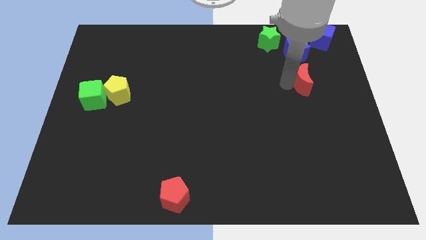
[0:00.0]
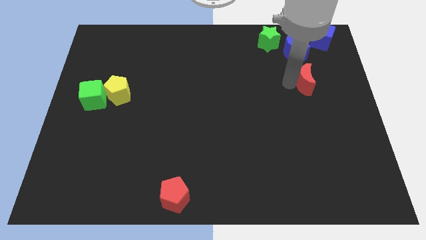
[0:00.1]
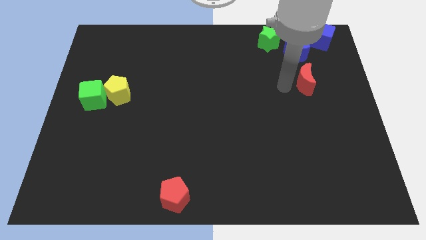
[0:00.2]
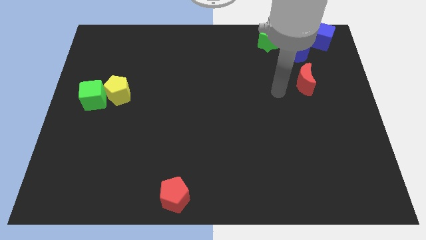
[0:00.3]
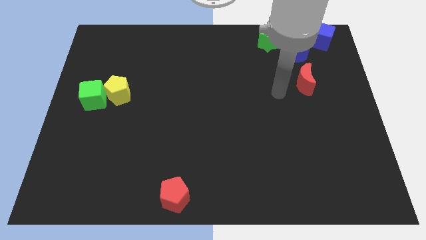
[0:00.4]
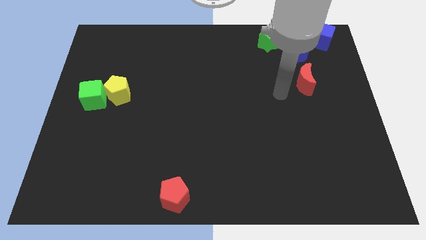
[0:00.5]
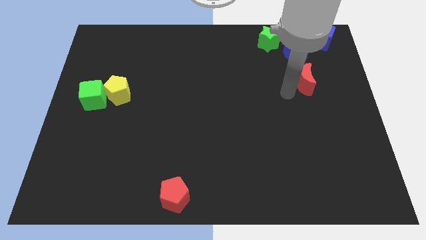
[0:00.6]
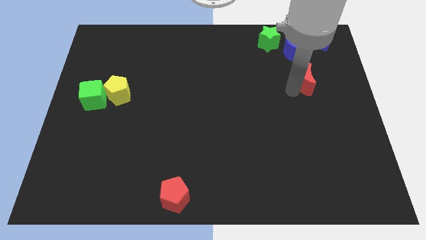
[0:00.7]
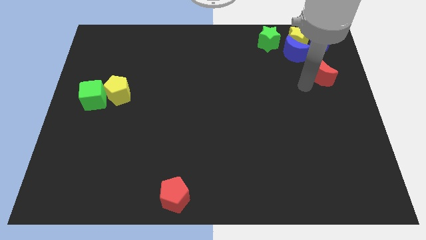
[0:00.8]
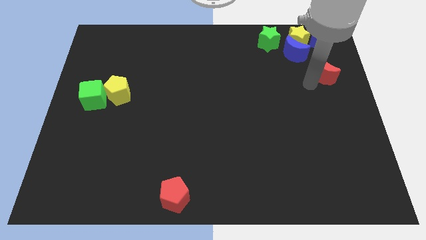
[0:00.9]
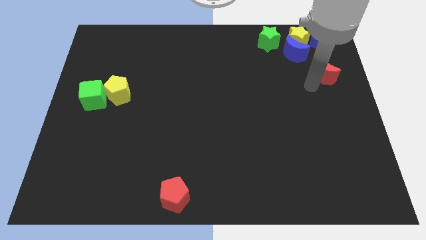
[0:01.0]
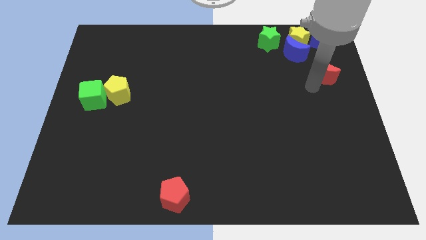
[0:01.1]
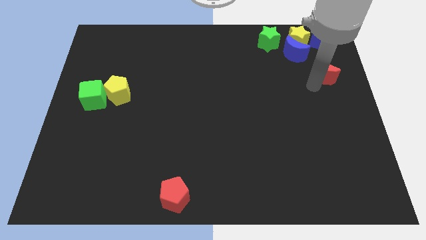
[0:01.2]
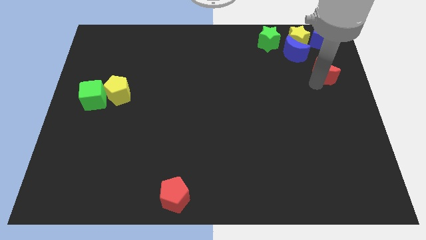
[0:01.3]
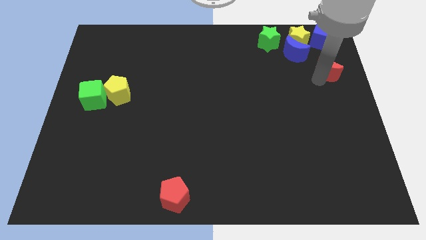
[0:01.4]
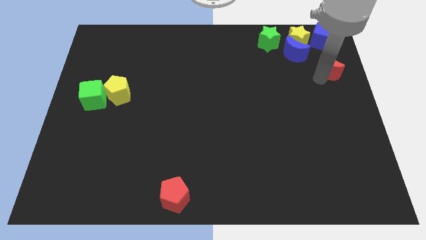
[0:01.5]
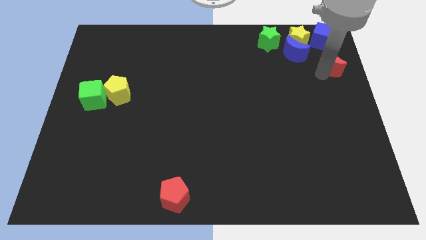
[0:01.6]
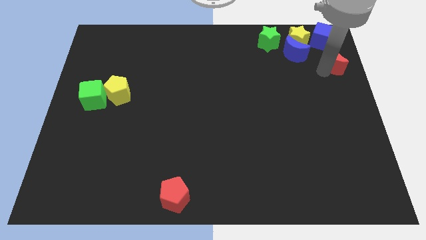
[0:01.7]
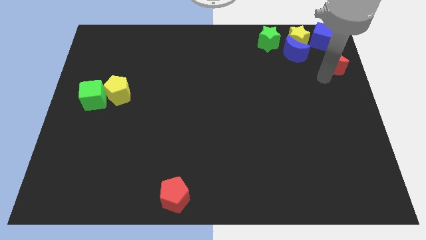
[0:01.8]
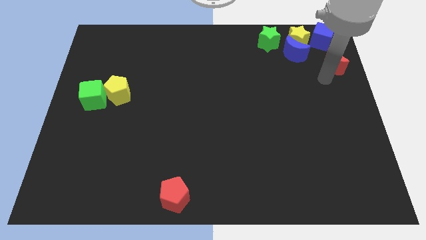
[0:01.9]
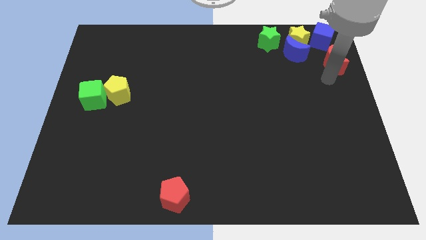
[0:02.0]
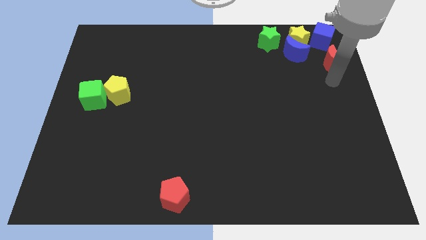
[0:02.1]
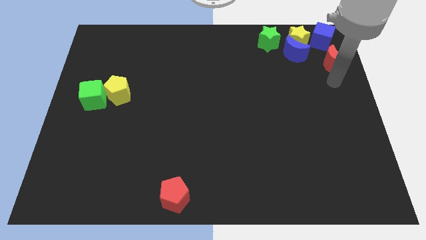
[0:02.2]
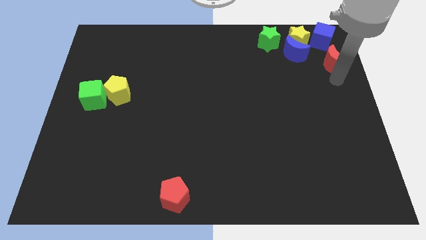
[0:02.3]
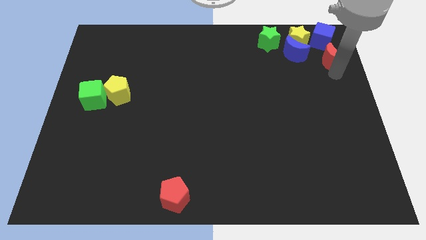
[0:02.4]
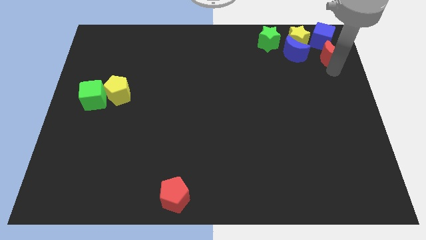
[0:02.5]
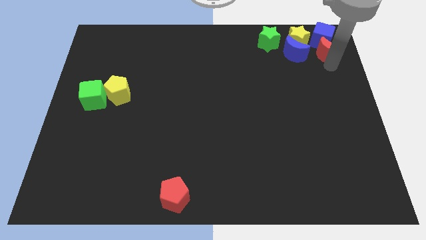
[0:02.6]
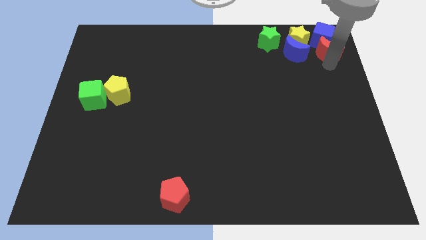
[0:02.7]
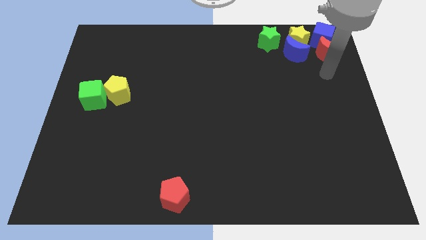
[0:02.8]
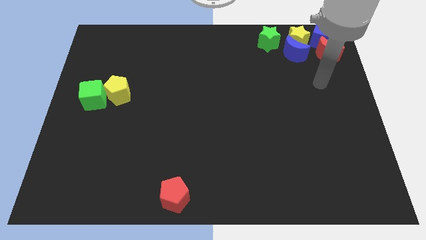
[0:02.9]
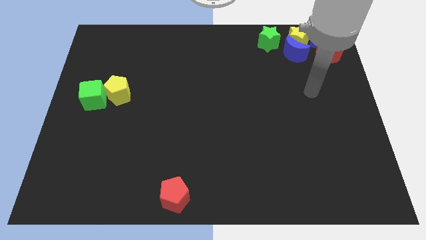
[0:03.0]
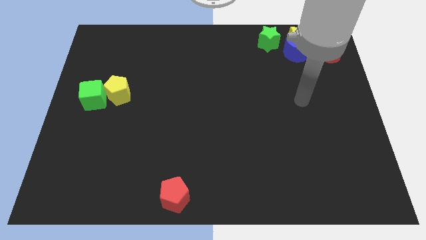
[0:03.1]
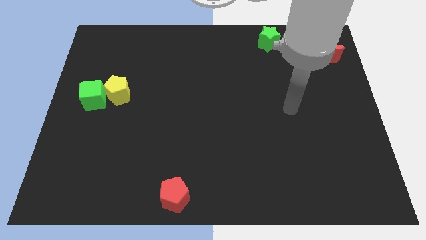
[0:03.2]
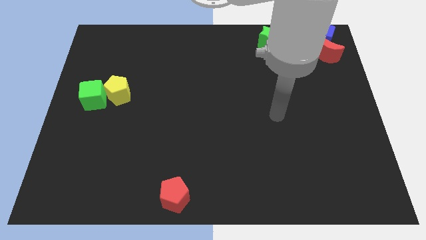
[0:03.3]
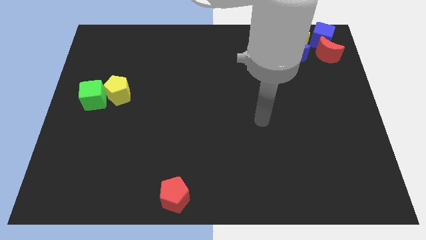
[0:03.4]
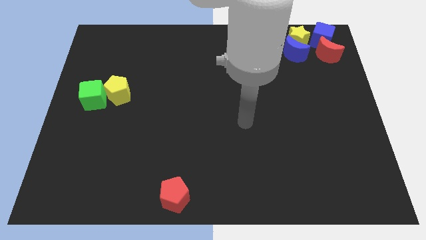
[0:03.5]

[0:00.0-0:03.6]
place the red moon below the blue cube

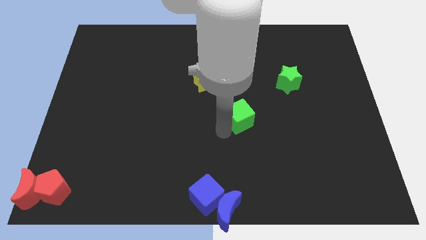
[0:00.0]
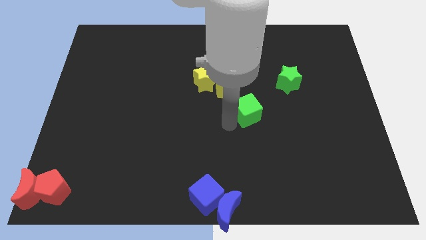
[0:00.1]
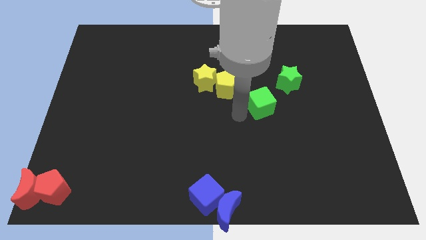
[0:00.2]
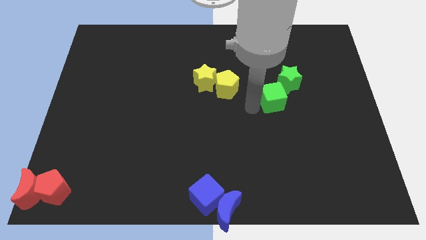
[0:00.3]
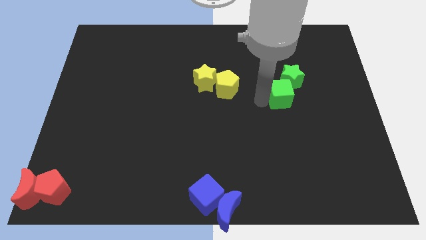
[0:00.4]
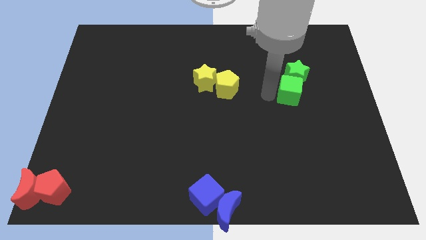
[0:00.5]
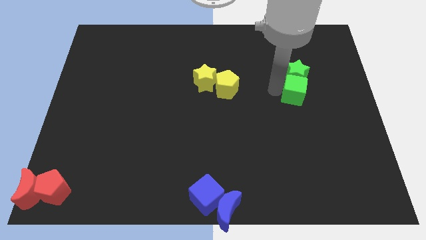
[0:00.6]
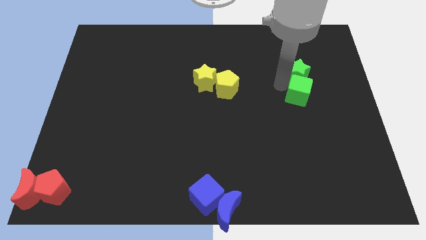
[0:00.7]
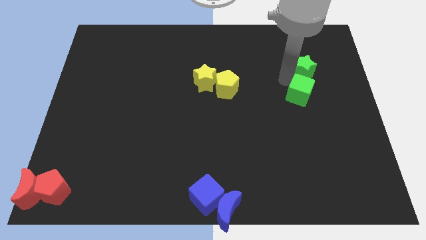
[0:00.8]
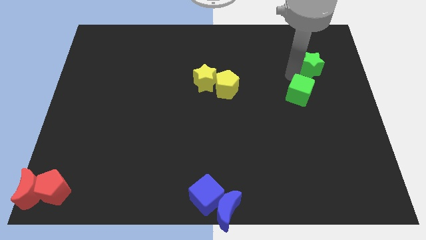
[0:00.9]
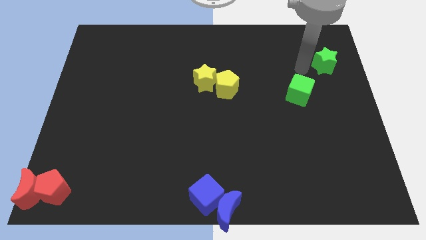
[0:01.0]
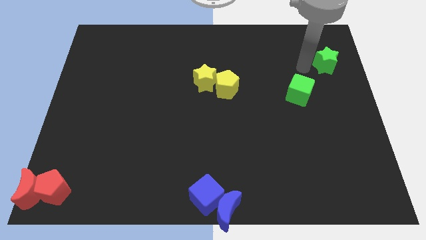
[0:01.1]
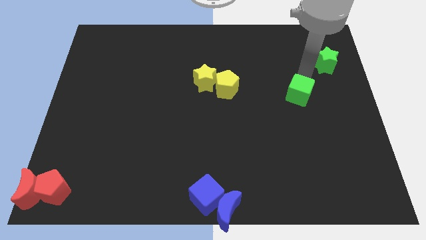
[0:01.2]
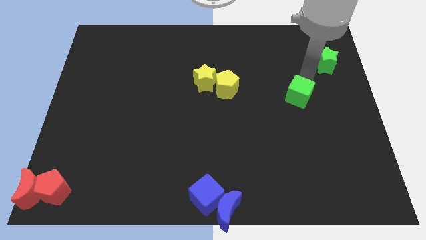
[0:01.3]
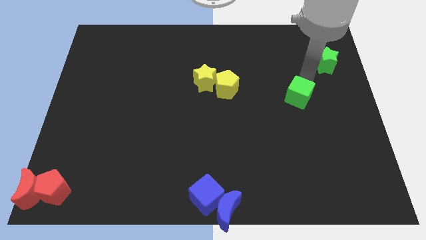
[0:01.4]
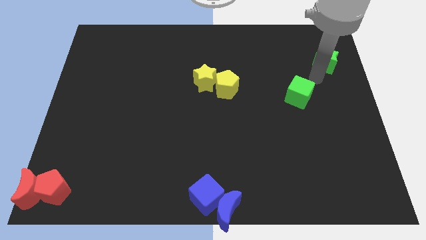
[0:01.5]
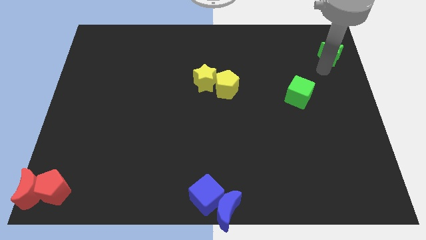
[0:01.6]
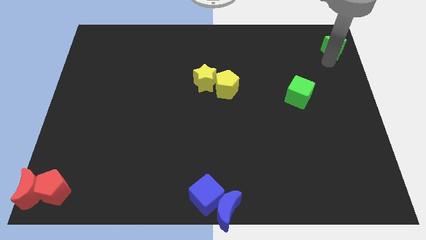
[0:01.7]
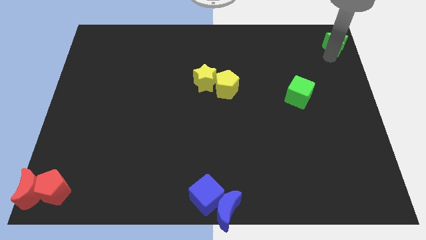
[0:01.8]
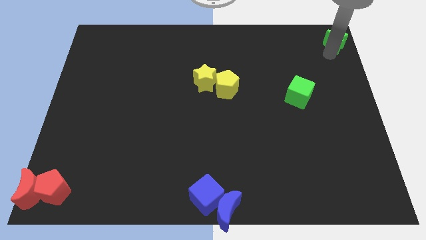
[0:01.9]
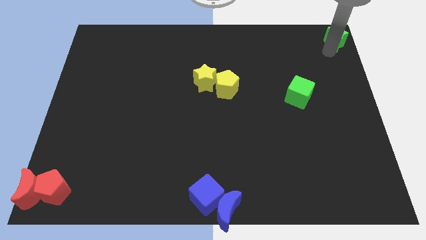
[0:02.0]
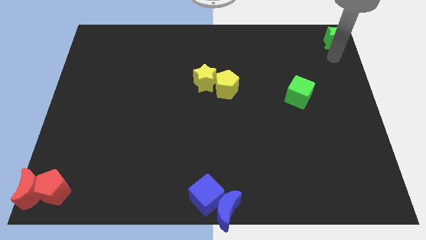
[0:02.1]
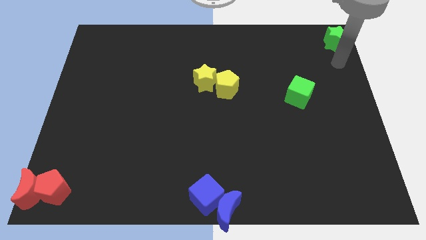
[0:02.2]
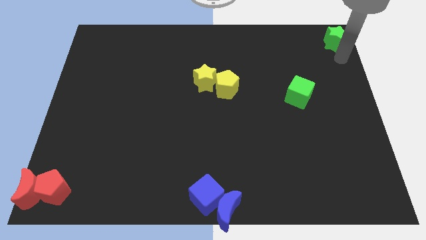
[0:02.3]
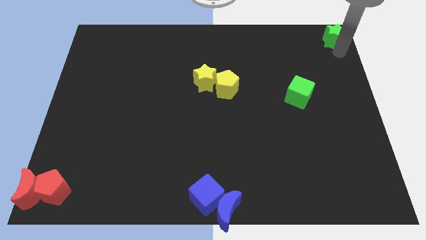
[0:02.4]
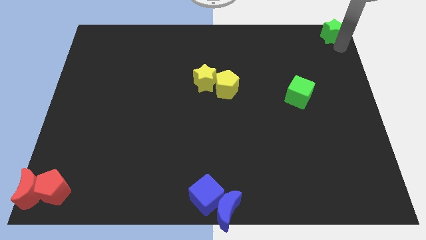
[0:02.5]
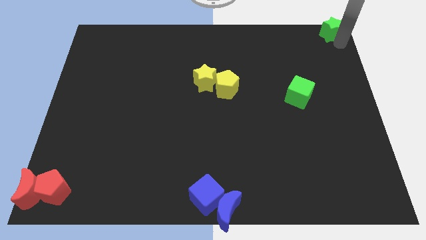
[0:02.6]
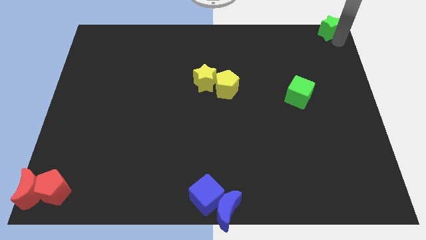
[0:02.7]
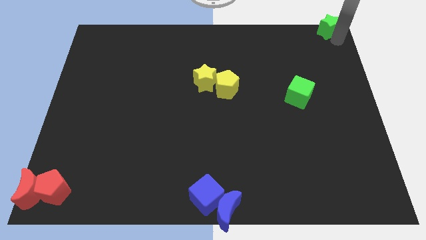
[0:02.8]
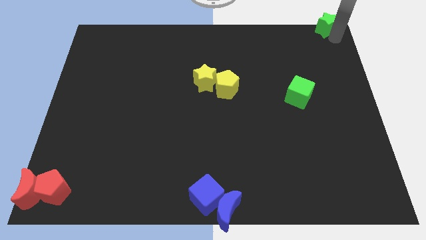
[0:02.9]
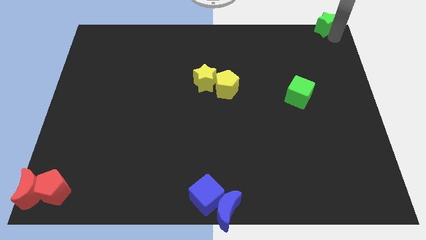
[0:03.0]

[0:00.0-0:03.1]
move the green star to the top right corner of the board

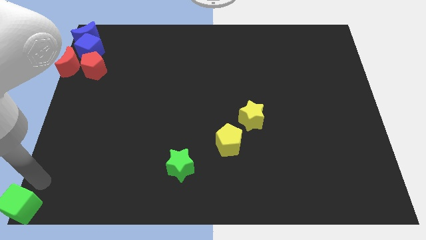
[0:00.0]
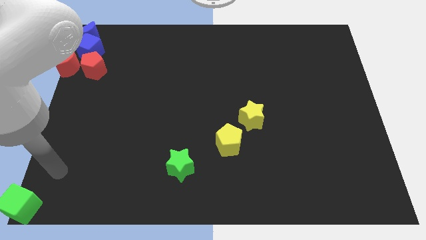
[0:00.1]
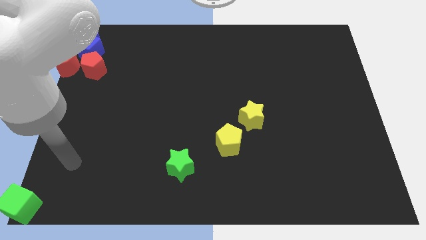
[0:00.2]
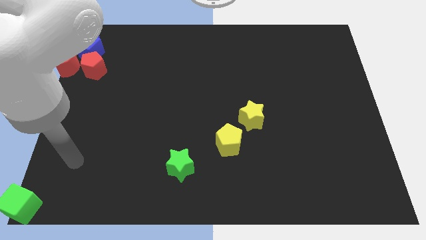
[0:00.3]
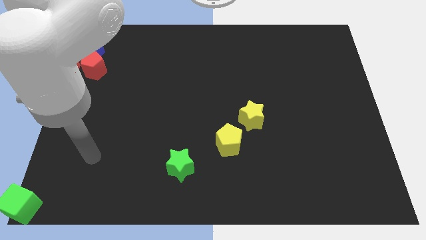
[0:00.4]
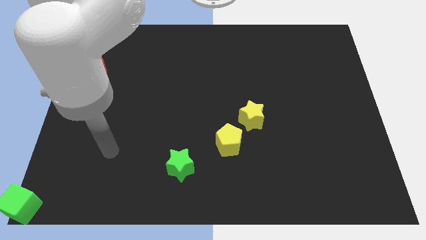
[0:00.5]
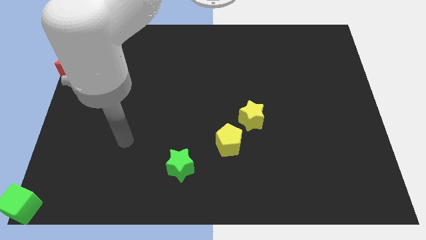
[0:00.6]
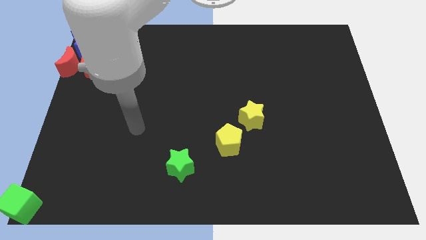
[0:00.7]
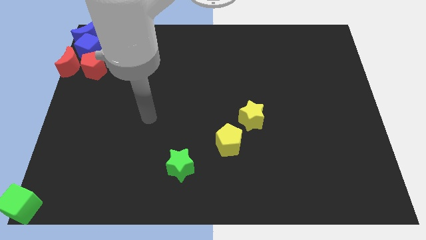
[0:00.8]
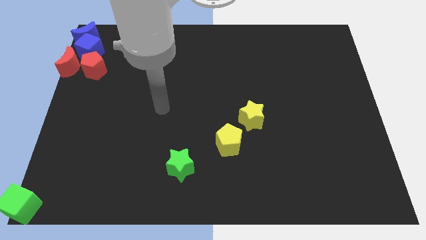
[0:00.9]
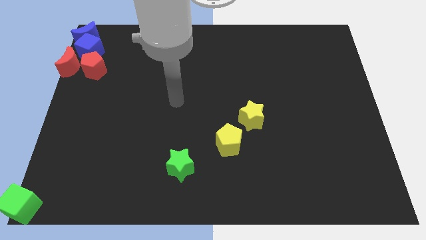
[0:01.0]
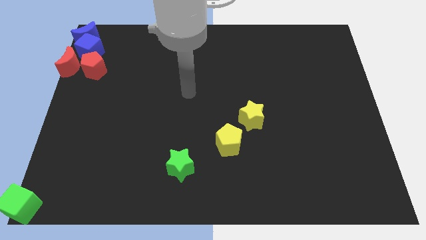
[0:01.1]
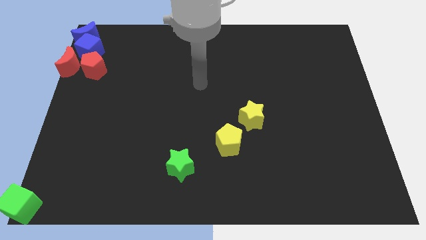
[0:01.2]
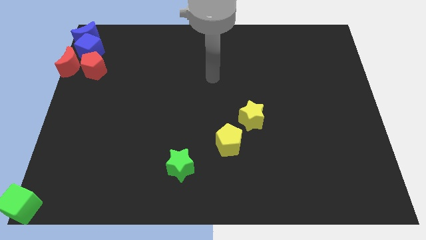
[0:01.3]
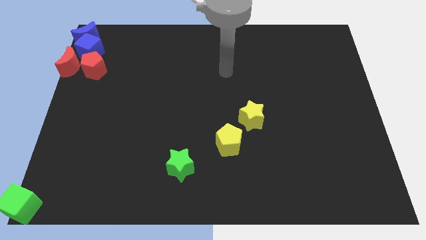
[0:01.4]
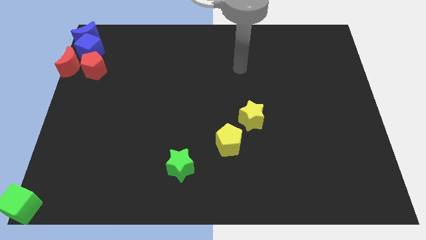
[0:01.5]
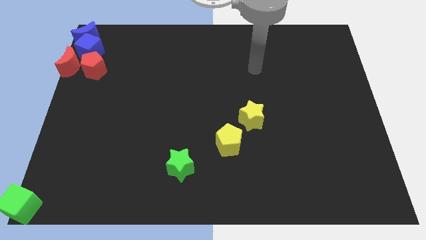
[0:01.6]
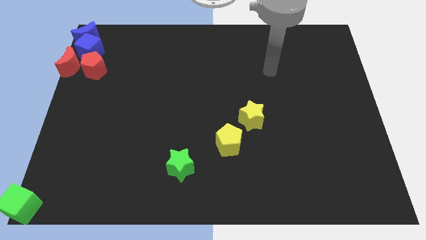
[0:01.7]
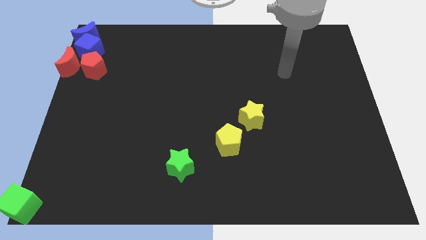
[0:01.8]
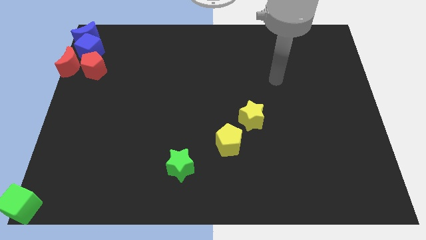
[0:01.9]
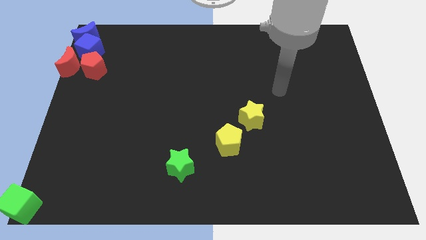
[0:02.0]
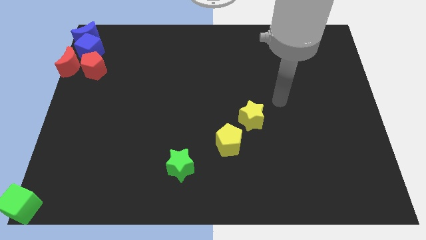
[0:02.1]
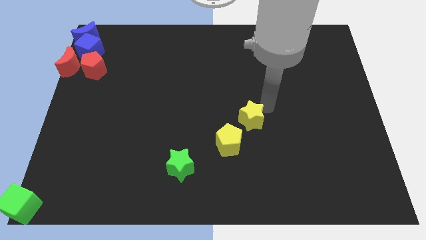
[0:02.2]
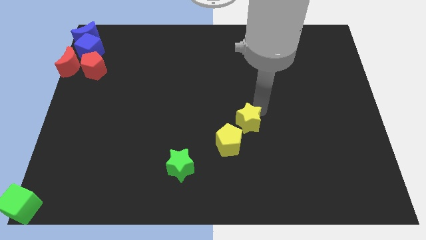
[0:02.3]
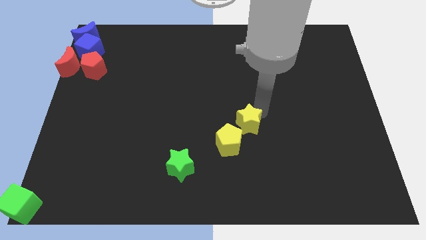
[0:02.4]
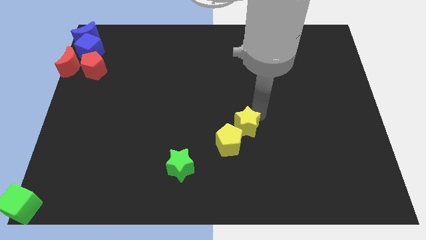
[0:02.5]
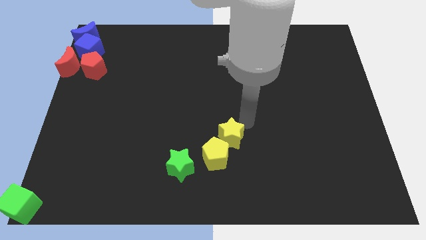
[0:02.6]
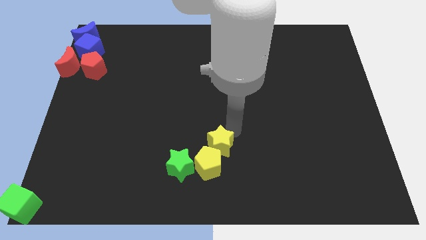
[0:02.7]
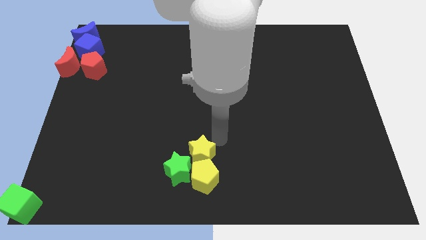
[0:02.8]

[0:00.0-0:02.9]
push the yellow star into the yellow pentagon
